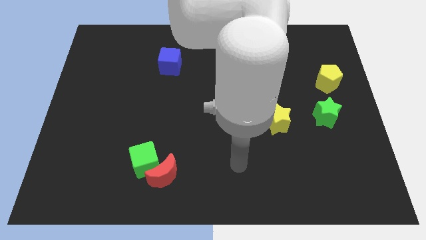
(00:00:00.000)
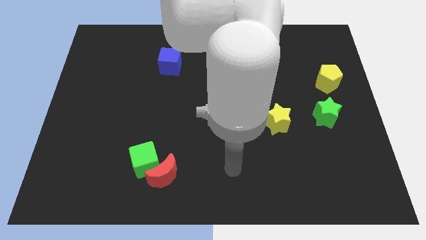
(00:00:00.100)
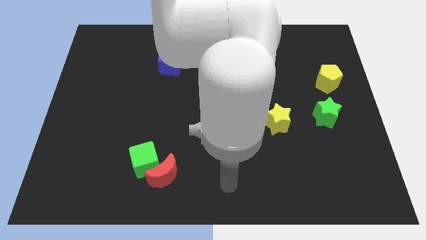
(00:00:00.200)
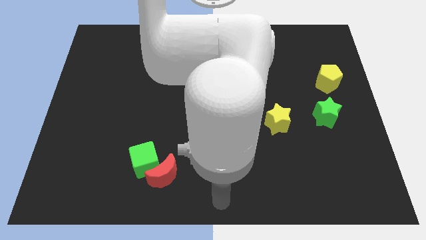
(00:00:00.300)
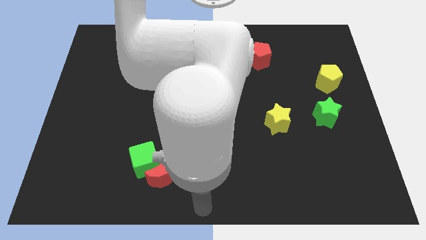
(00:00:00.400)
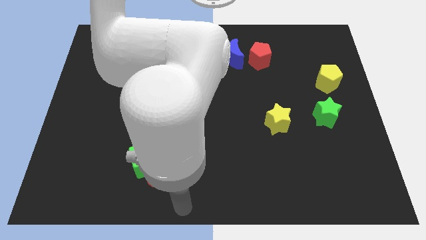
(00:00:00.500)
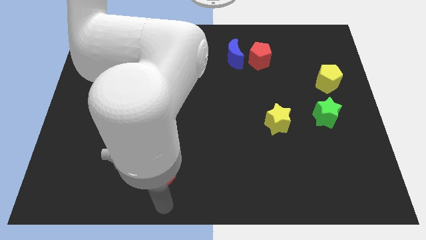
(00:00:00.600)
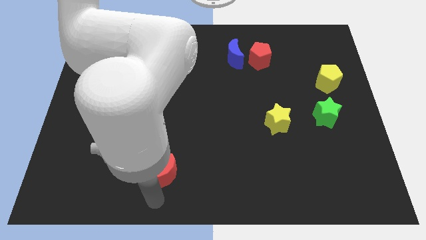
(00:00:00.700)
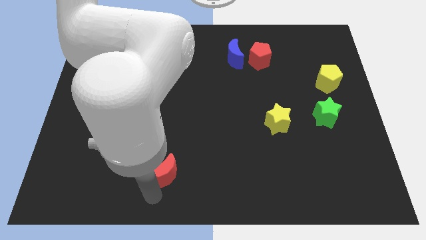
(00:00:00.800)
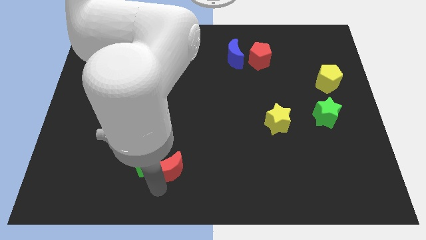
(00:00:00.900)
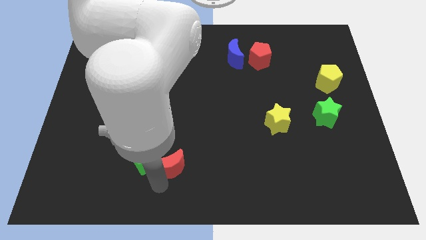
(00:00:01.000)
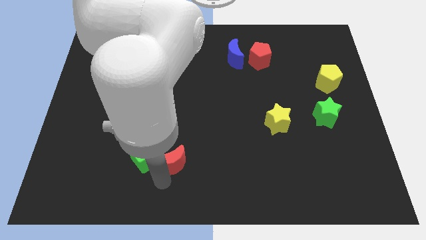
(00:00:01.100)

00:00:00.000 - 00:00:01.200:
slightly push the red crescent and green cube towards the top side of the board

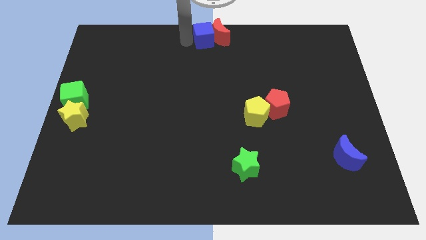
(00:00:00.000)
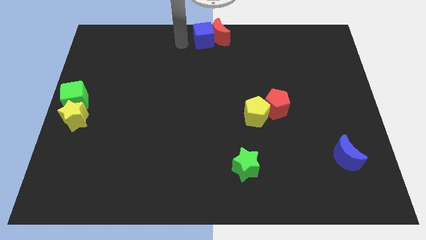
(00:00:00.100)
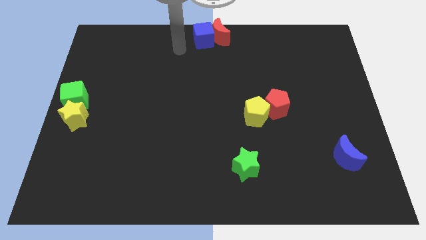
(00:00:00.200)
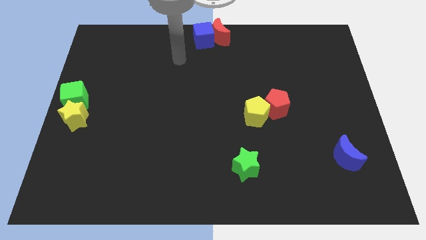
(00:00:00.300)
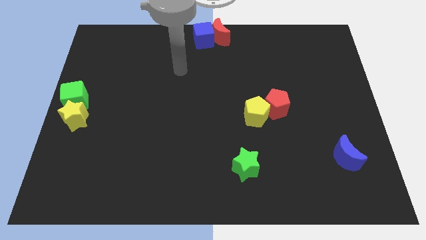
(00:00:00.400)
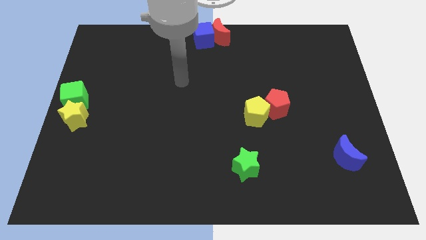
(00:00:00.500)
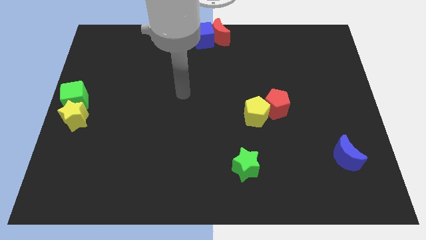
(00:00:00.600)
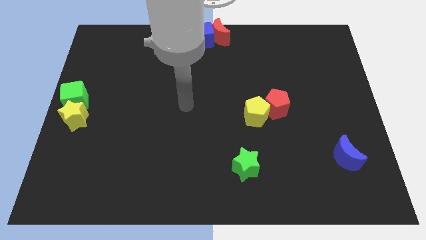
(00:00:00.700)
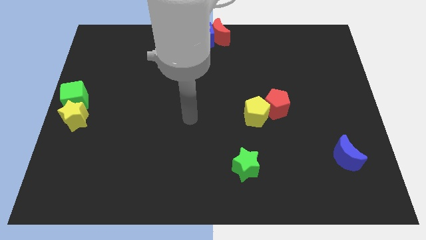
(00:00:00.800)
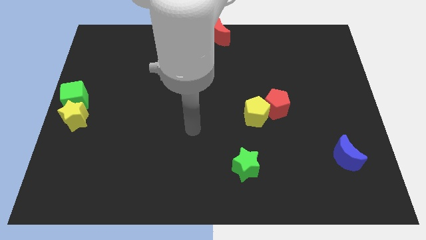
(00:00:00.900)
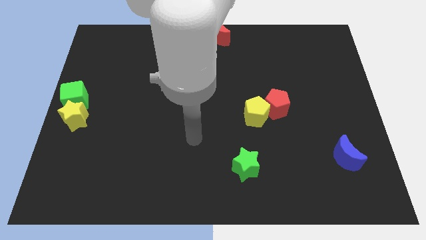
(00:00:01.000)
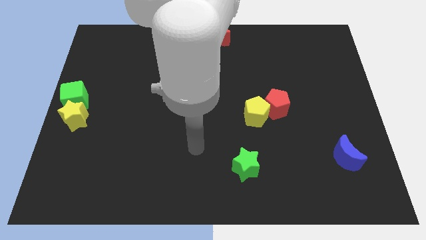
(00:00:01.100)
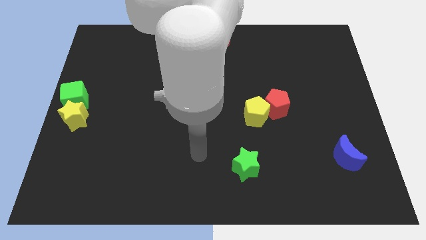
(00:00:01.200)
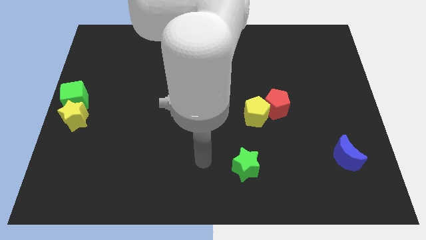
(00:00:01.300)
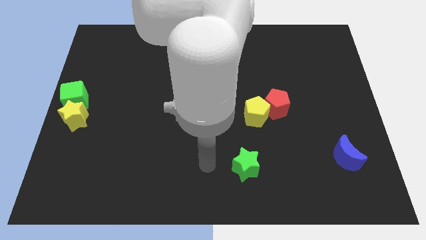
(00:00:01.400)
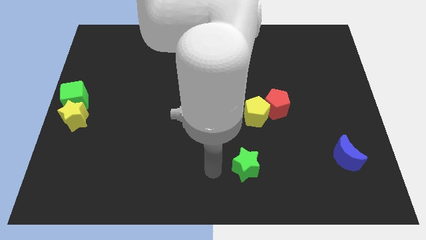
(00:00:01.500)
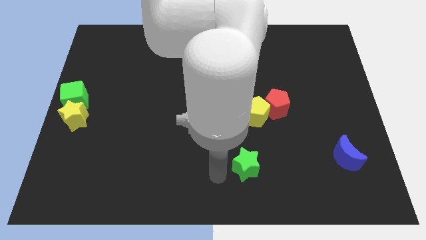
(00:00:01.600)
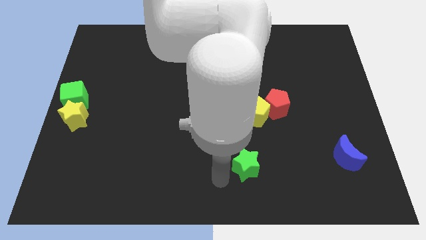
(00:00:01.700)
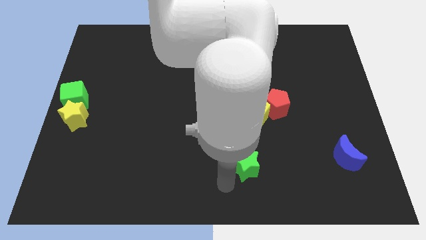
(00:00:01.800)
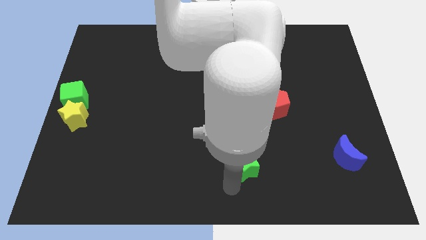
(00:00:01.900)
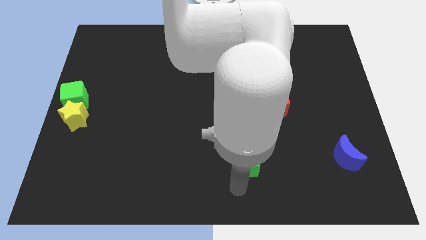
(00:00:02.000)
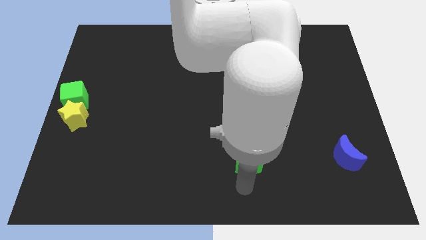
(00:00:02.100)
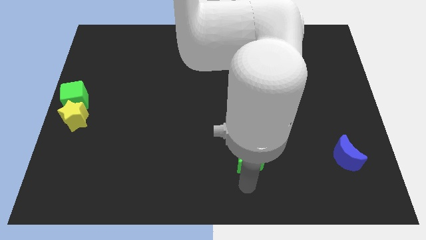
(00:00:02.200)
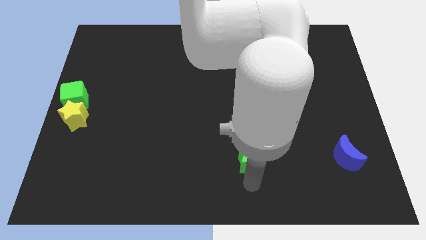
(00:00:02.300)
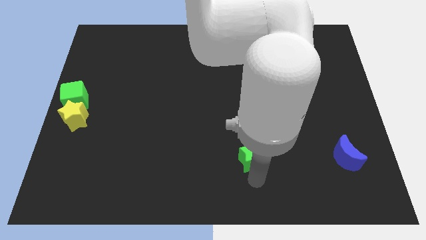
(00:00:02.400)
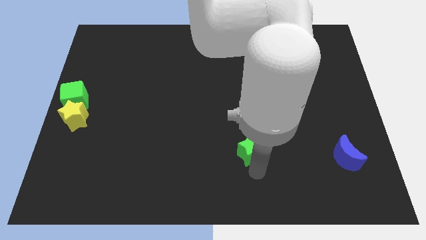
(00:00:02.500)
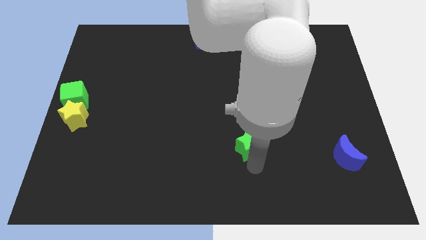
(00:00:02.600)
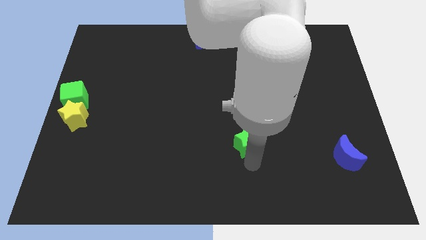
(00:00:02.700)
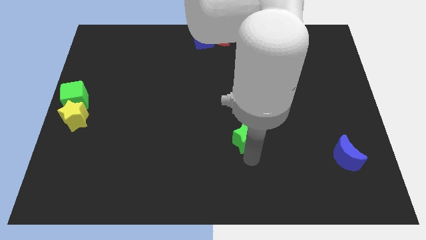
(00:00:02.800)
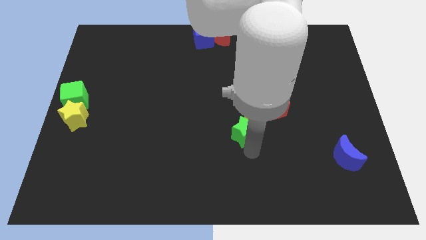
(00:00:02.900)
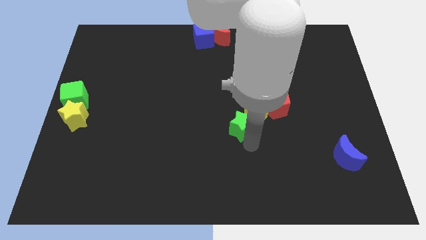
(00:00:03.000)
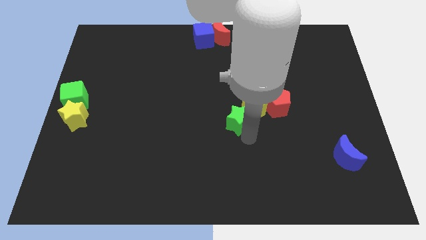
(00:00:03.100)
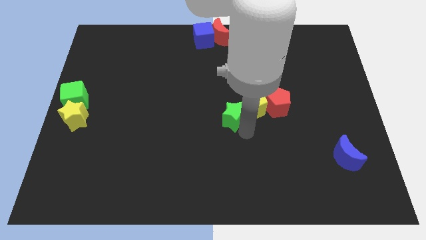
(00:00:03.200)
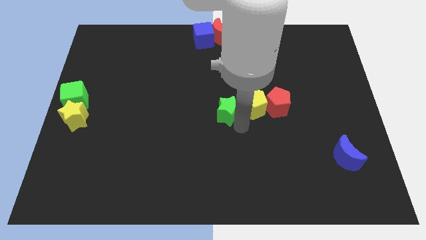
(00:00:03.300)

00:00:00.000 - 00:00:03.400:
slide the green star towards the center

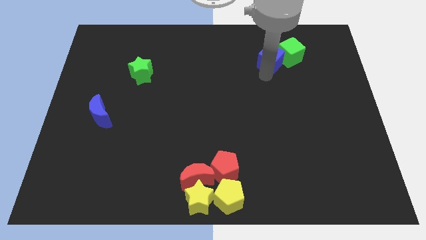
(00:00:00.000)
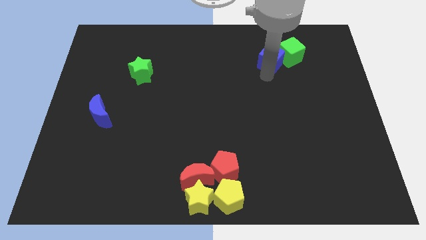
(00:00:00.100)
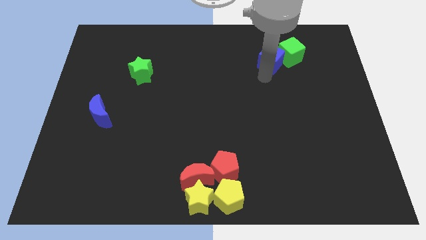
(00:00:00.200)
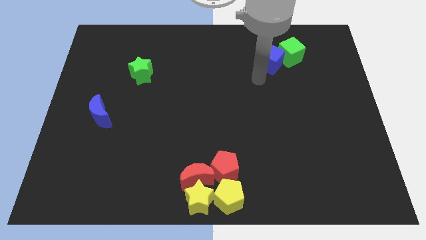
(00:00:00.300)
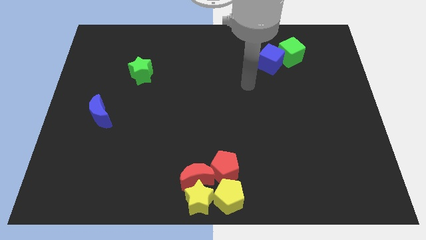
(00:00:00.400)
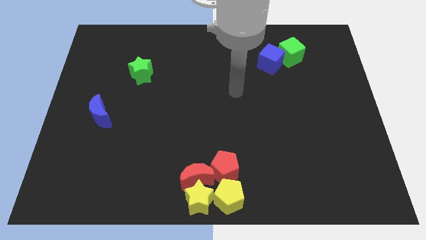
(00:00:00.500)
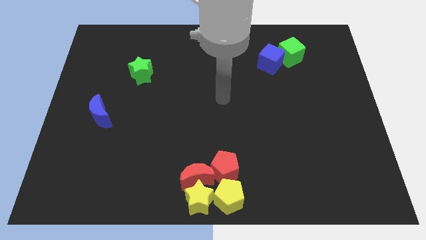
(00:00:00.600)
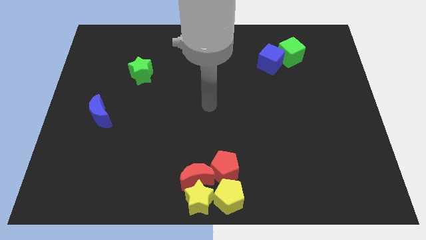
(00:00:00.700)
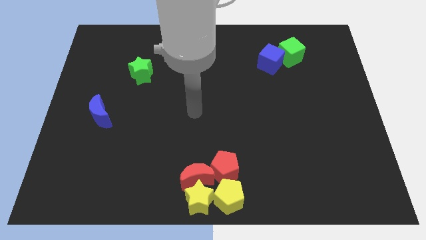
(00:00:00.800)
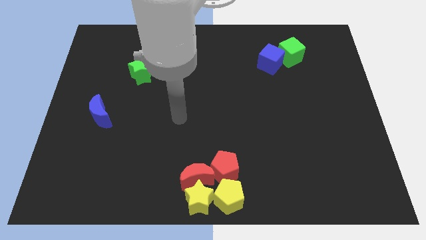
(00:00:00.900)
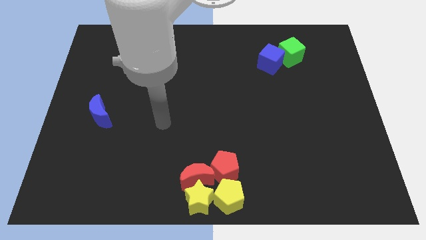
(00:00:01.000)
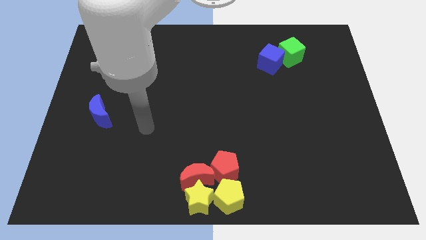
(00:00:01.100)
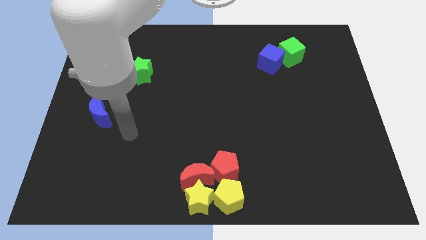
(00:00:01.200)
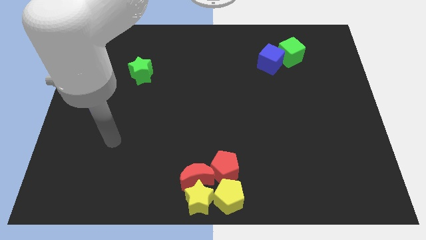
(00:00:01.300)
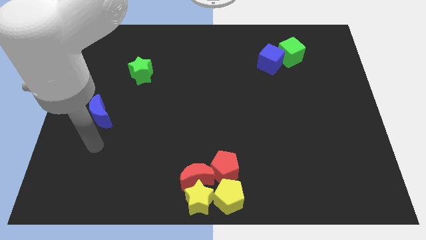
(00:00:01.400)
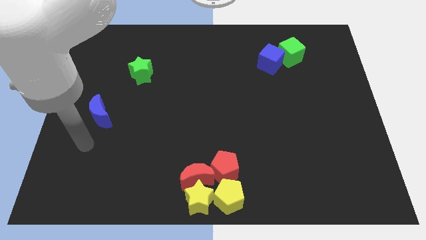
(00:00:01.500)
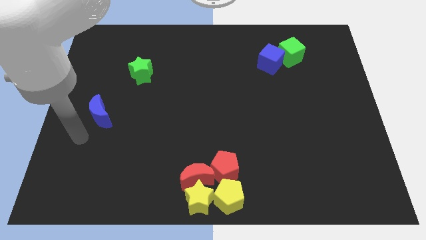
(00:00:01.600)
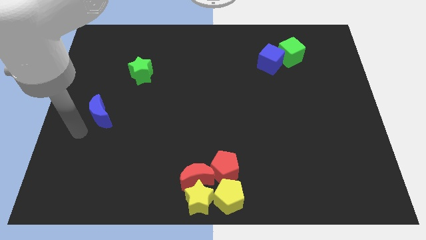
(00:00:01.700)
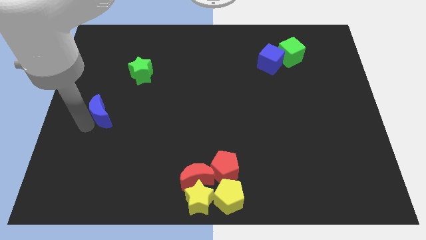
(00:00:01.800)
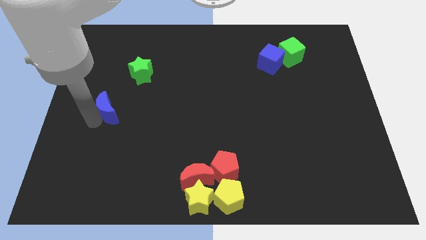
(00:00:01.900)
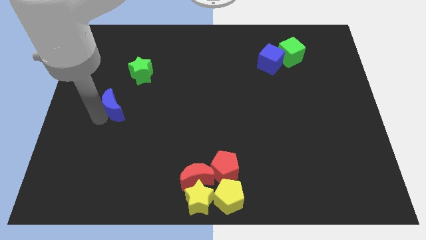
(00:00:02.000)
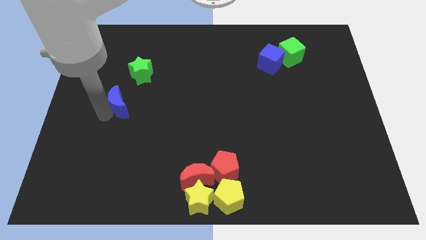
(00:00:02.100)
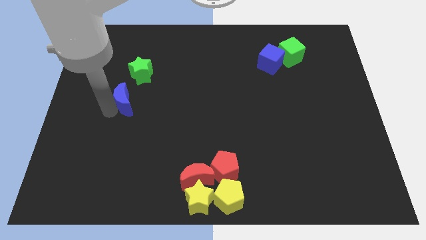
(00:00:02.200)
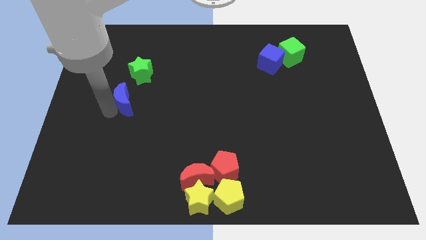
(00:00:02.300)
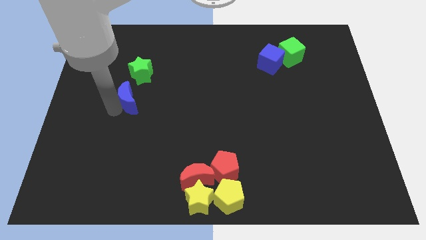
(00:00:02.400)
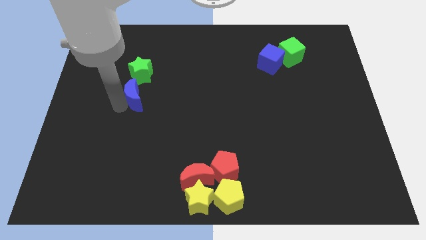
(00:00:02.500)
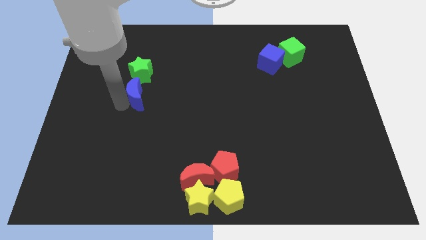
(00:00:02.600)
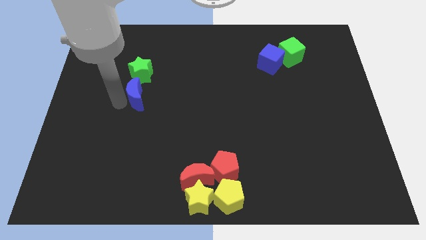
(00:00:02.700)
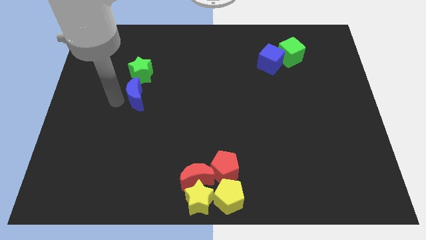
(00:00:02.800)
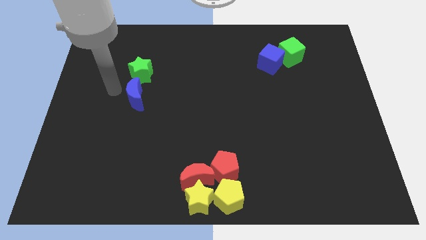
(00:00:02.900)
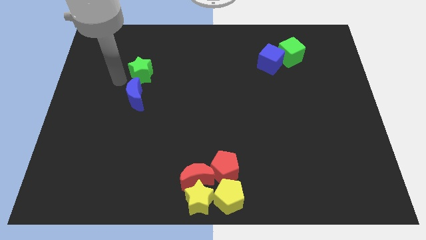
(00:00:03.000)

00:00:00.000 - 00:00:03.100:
place blue moon below the green star

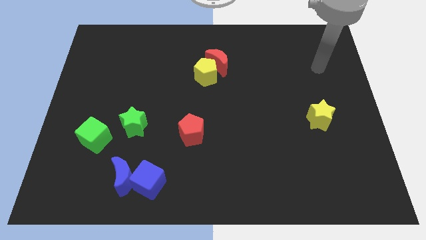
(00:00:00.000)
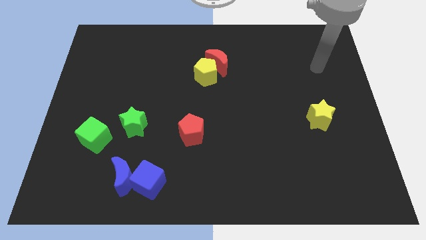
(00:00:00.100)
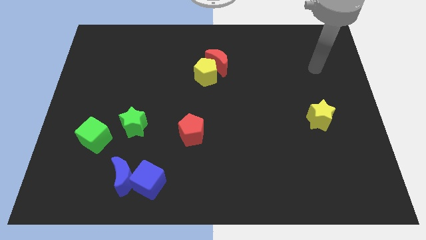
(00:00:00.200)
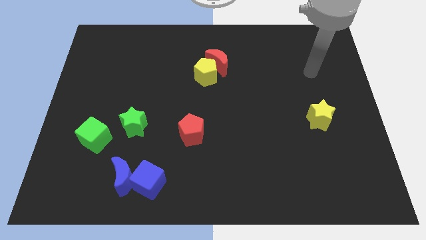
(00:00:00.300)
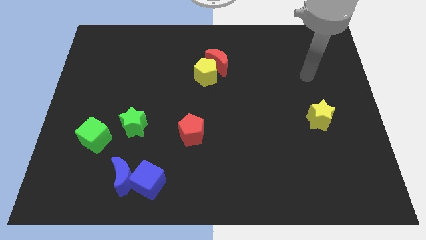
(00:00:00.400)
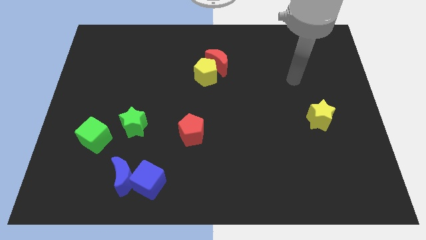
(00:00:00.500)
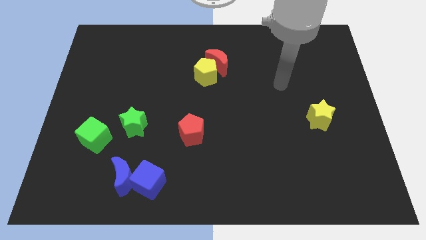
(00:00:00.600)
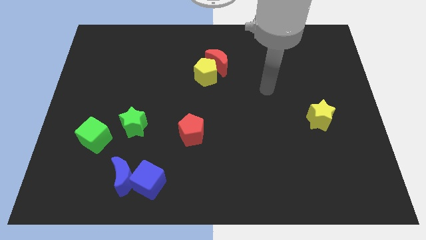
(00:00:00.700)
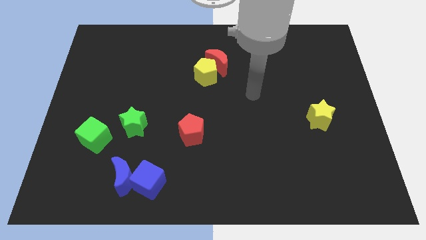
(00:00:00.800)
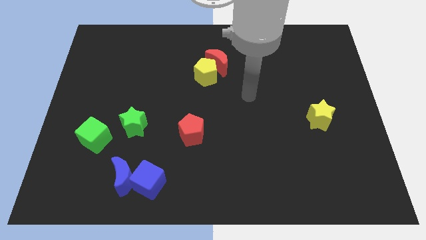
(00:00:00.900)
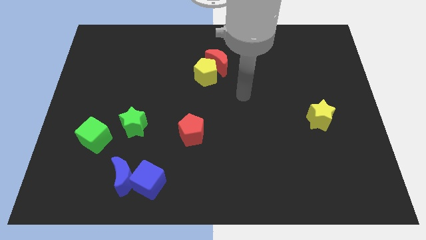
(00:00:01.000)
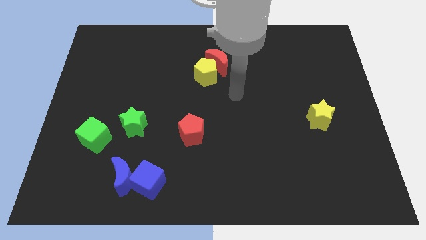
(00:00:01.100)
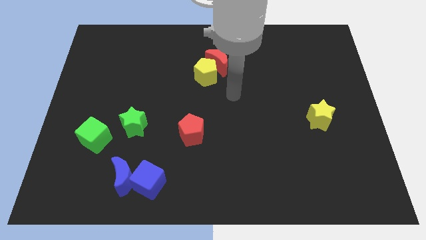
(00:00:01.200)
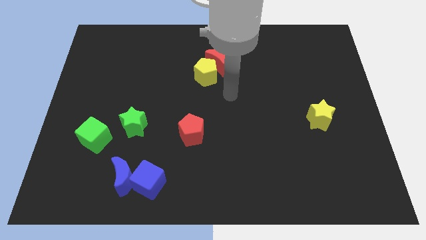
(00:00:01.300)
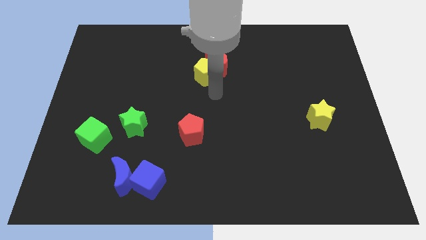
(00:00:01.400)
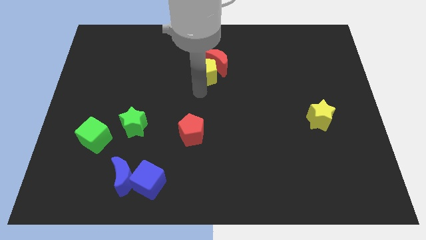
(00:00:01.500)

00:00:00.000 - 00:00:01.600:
move your arm towards the yellow pentagon
